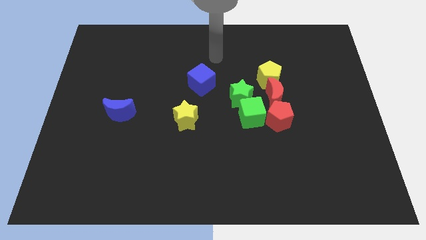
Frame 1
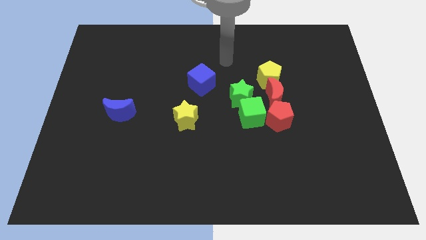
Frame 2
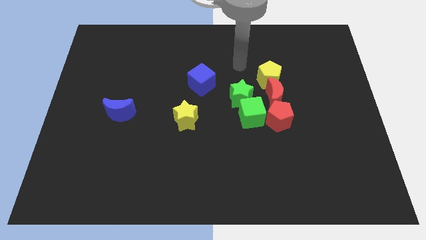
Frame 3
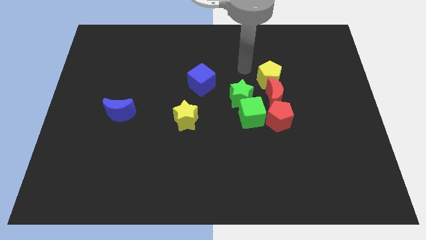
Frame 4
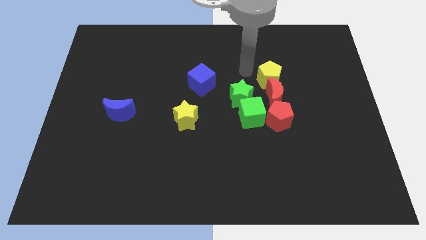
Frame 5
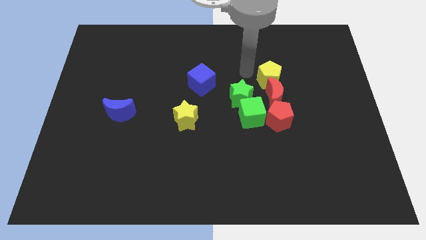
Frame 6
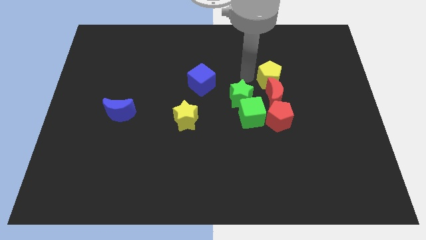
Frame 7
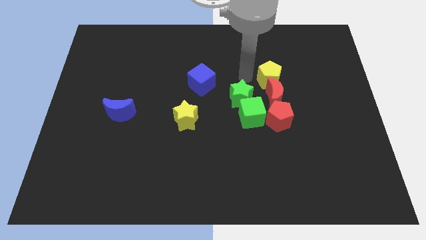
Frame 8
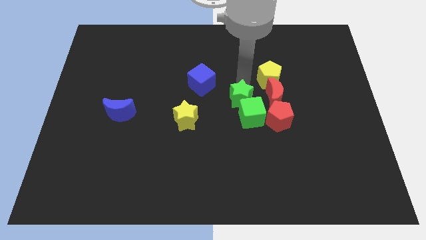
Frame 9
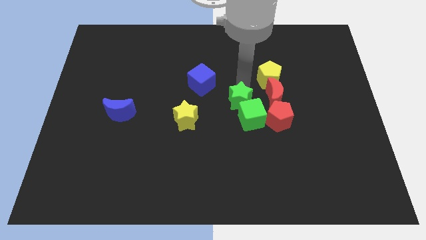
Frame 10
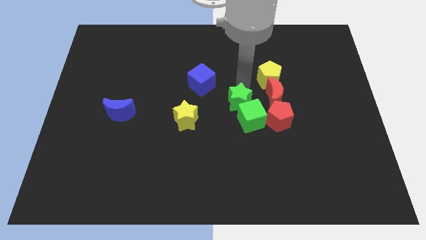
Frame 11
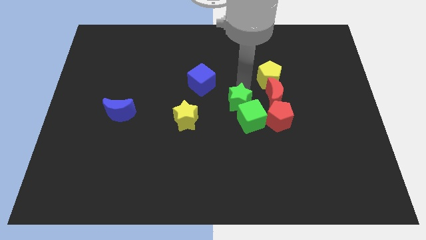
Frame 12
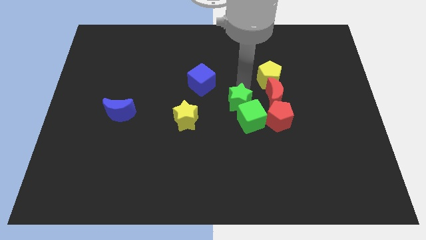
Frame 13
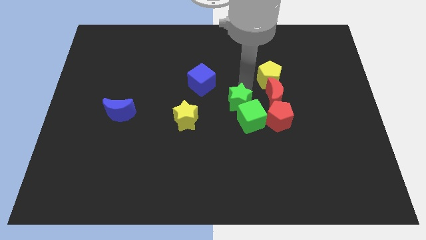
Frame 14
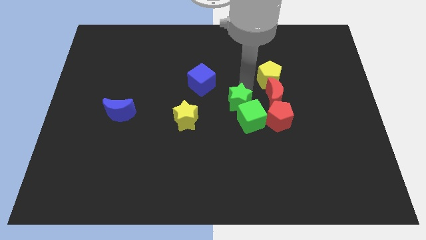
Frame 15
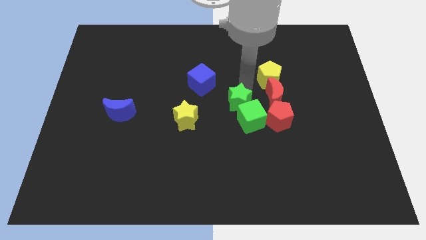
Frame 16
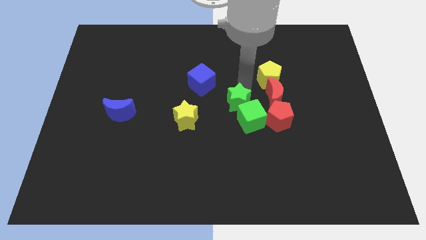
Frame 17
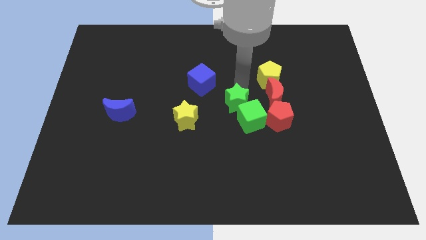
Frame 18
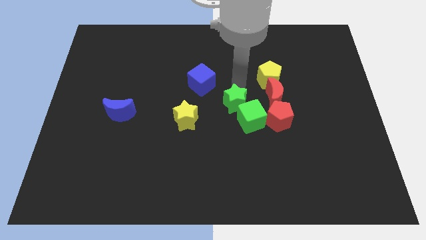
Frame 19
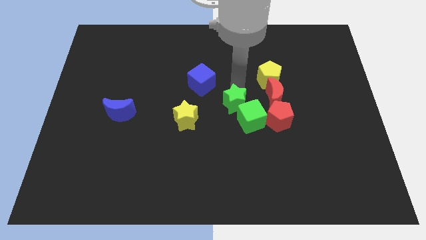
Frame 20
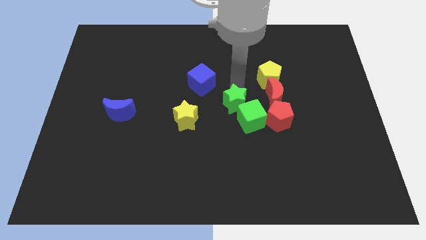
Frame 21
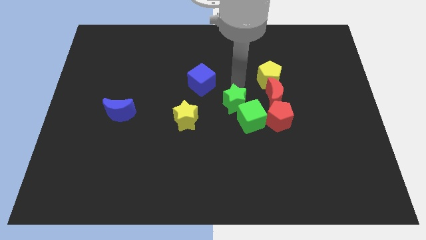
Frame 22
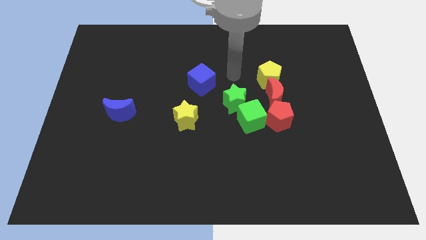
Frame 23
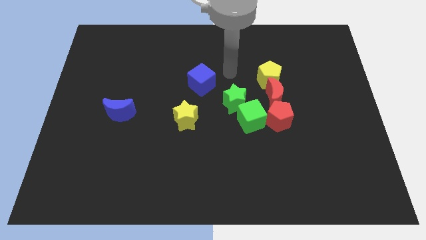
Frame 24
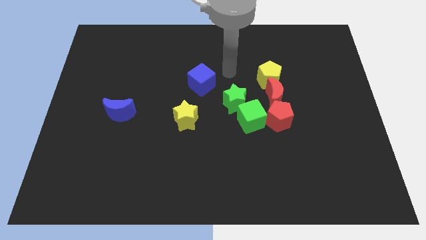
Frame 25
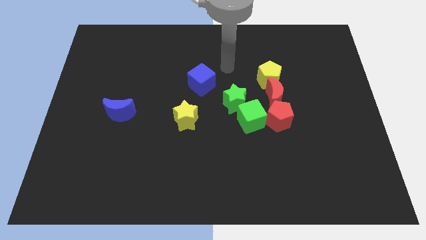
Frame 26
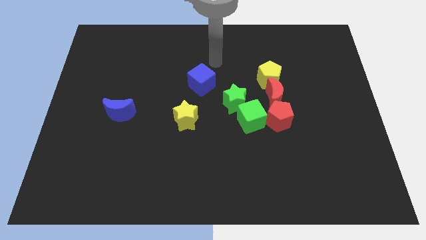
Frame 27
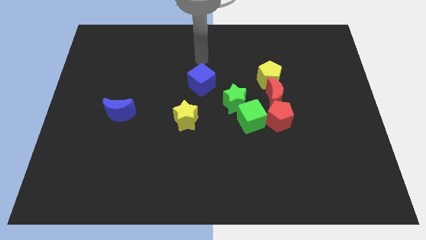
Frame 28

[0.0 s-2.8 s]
push the green star to the top left of the green cube

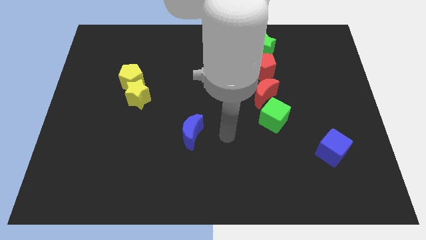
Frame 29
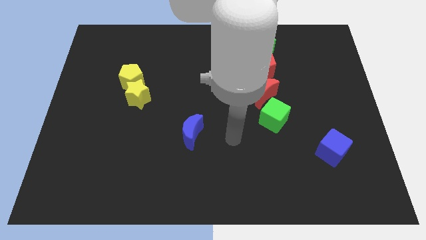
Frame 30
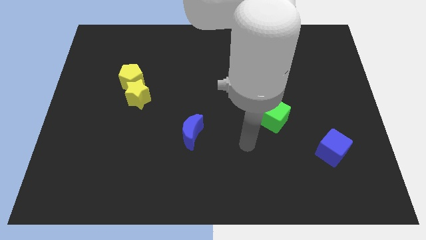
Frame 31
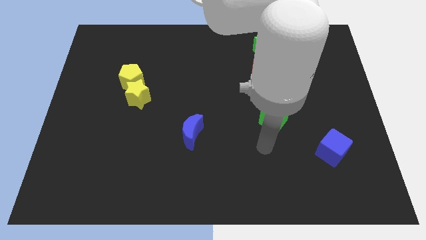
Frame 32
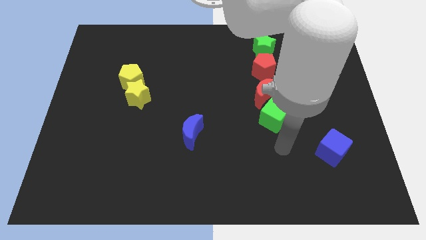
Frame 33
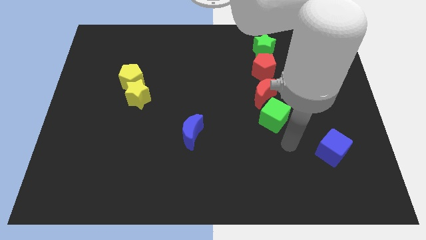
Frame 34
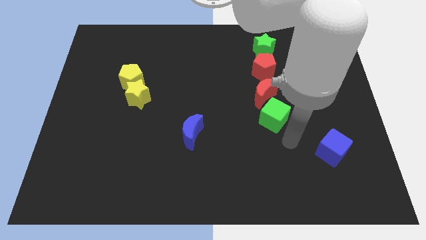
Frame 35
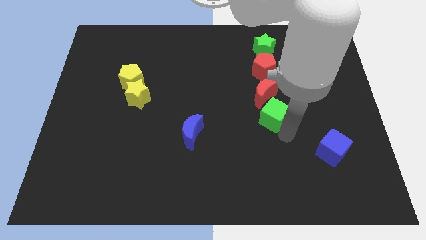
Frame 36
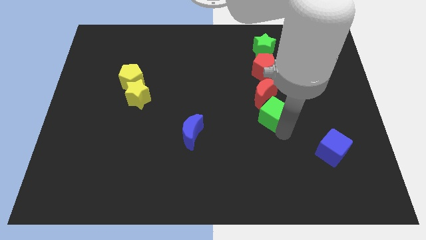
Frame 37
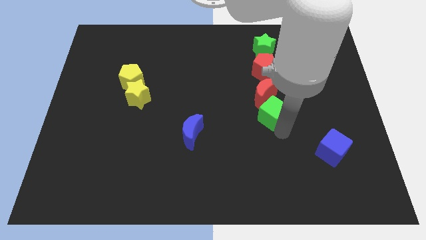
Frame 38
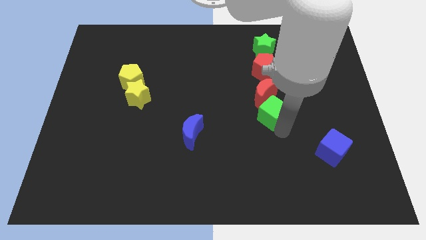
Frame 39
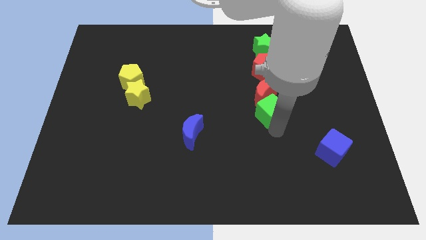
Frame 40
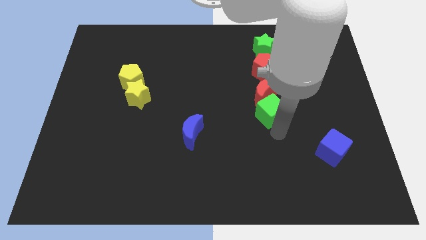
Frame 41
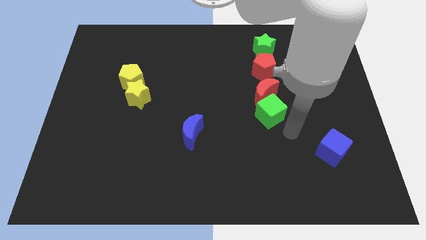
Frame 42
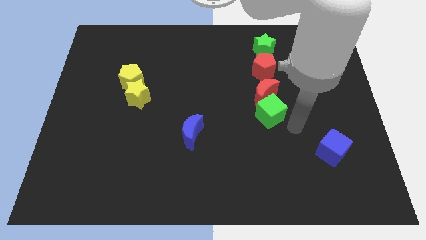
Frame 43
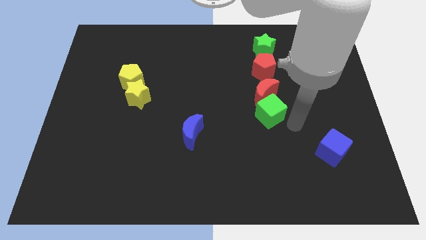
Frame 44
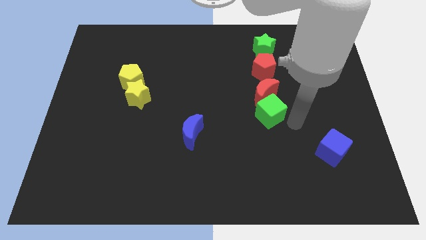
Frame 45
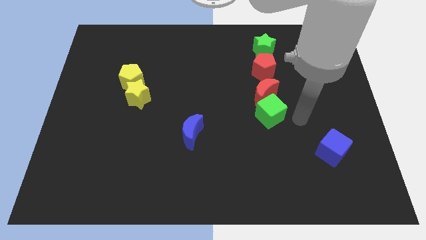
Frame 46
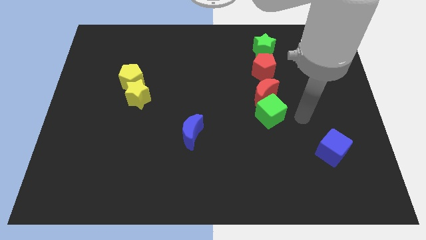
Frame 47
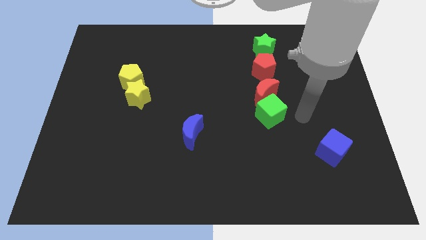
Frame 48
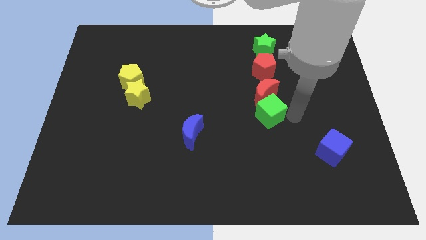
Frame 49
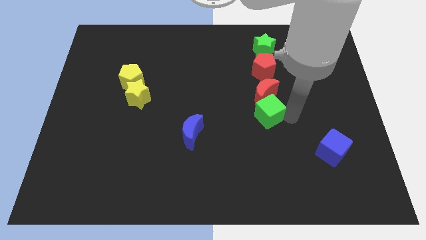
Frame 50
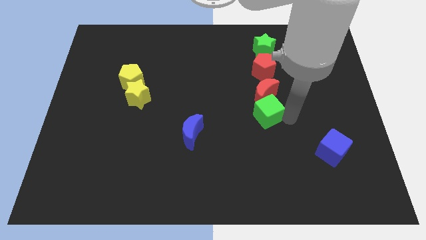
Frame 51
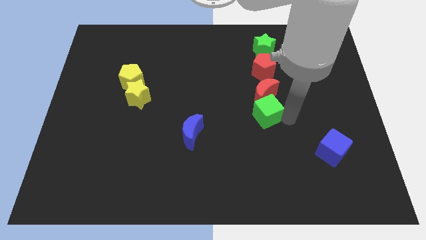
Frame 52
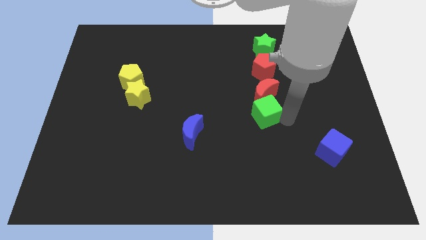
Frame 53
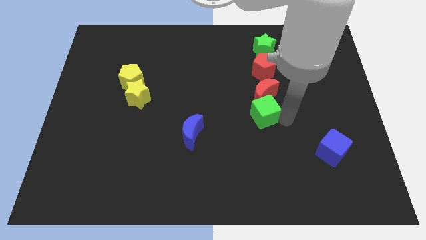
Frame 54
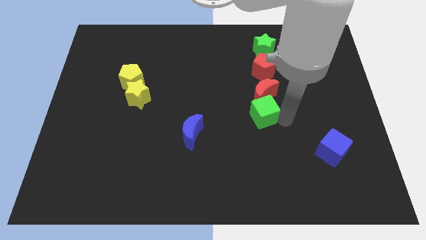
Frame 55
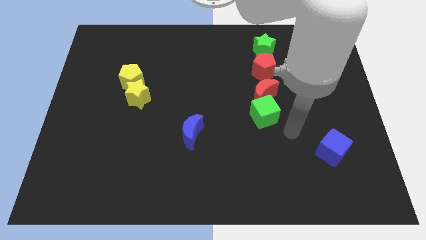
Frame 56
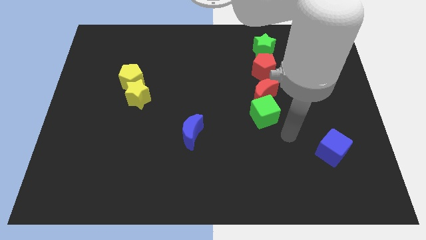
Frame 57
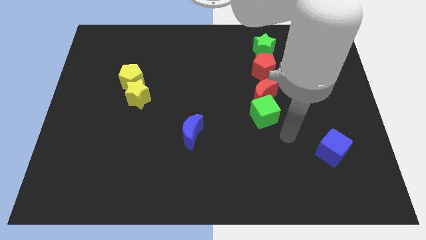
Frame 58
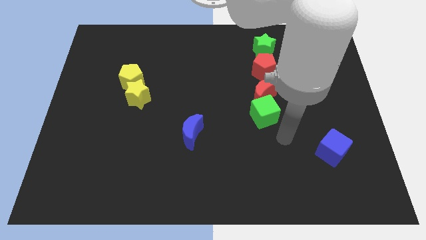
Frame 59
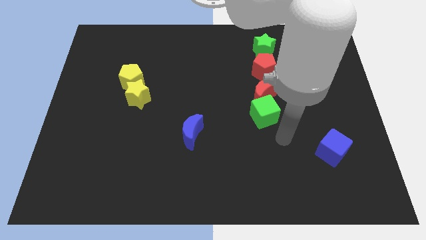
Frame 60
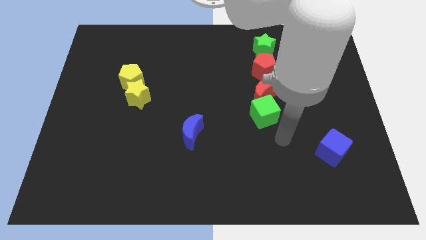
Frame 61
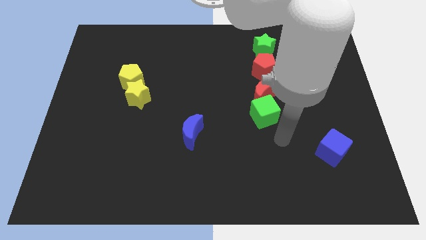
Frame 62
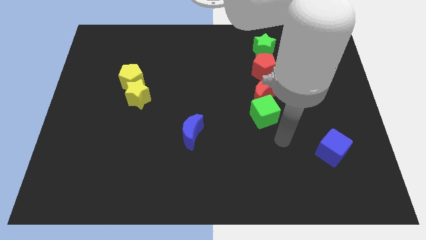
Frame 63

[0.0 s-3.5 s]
adjust the green cube below the red crescent

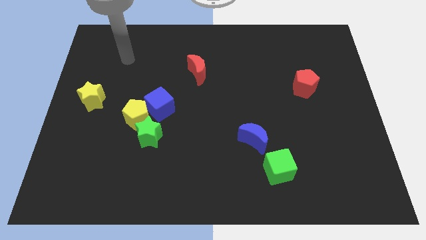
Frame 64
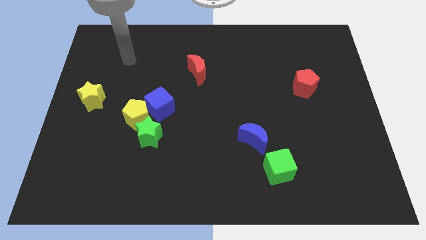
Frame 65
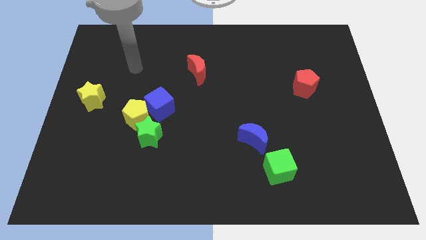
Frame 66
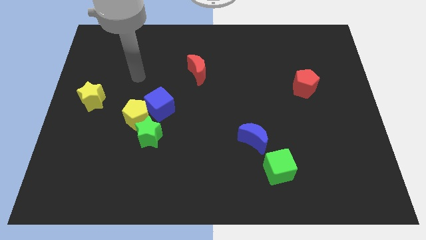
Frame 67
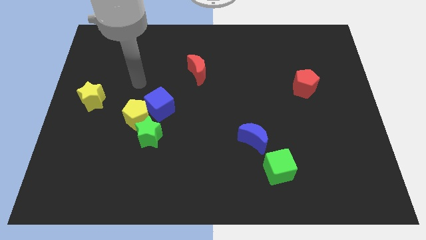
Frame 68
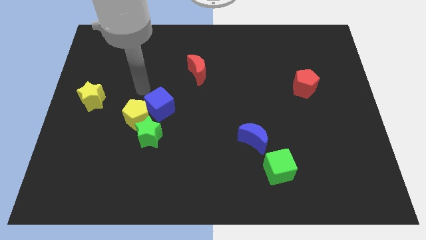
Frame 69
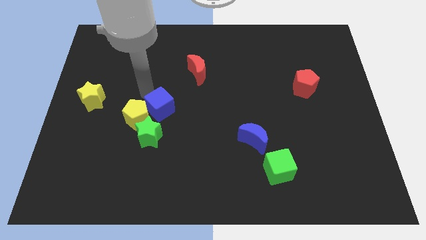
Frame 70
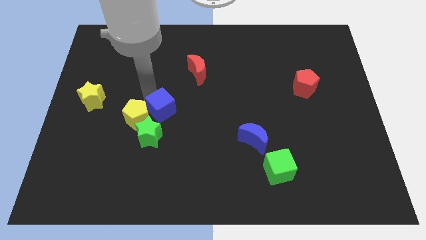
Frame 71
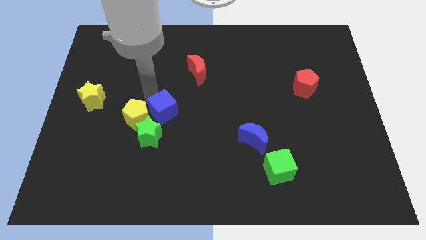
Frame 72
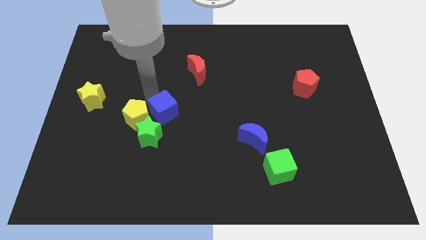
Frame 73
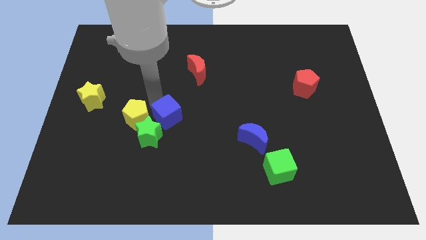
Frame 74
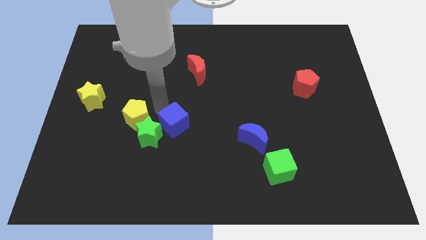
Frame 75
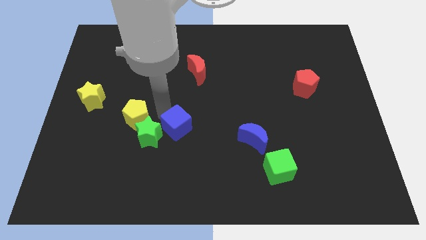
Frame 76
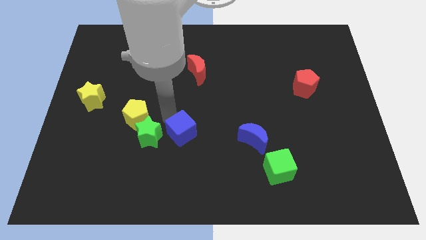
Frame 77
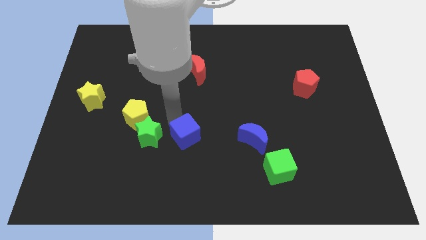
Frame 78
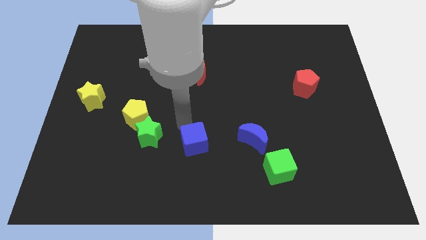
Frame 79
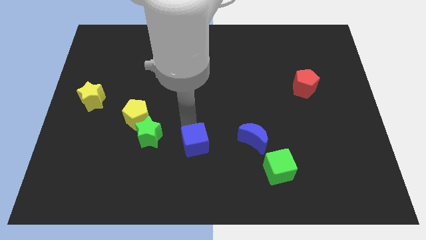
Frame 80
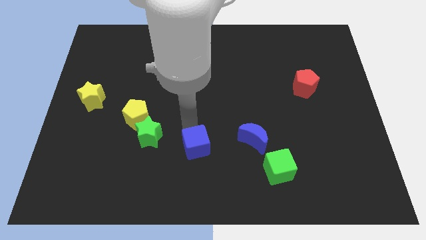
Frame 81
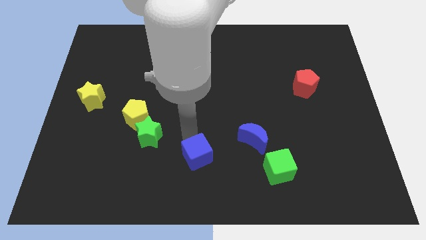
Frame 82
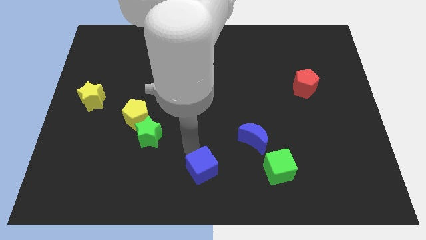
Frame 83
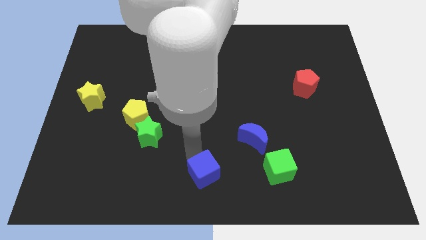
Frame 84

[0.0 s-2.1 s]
move the blue cube downwards

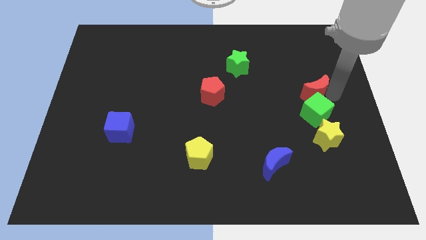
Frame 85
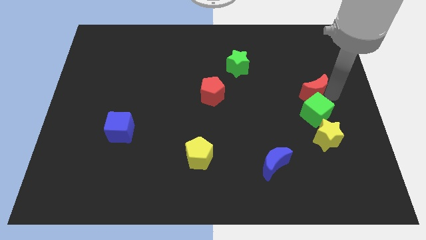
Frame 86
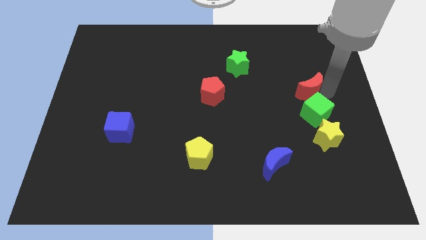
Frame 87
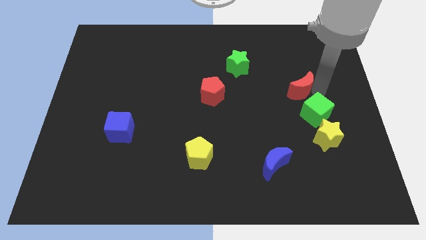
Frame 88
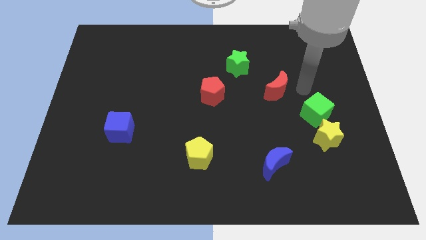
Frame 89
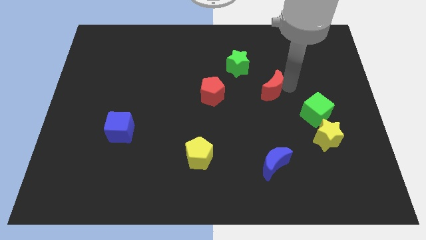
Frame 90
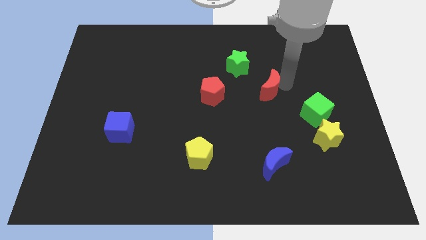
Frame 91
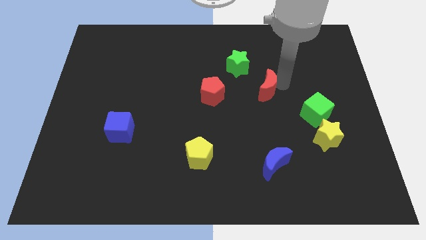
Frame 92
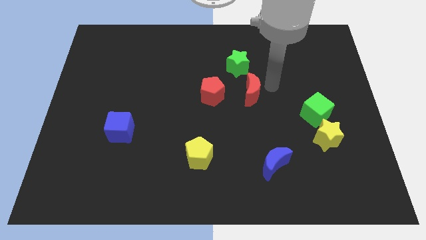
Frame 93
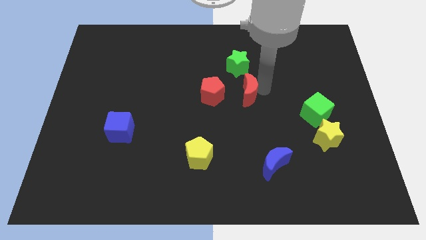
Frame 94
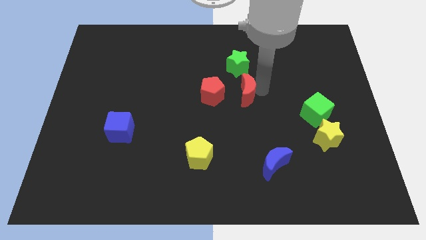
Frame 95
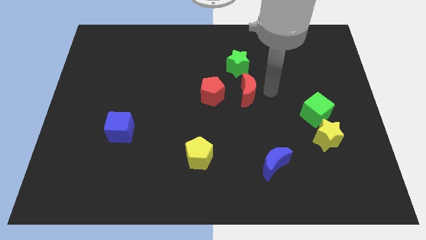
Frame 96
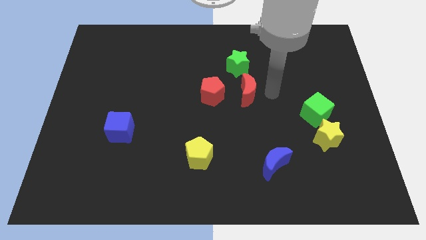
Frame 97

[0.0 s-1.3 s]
push red crescent below green star
